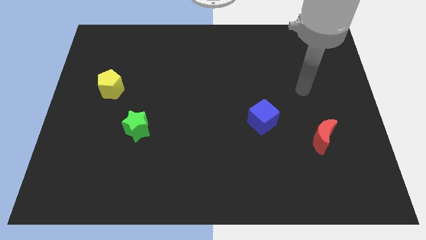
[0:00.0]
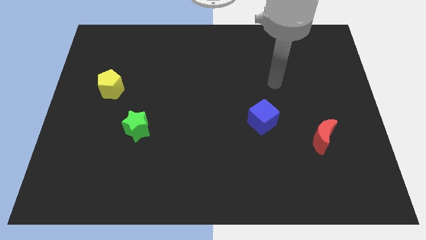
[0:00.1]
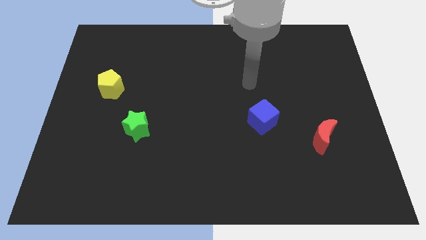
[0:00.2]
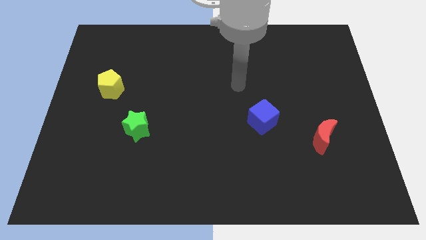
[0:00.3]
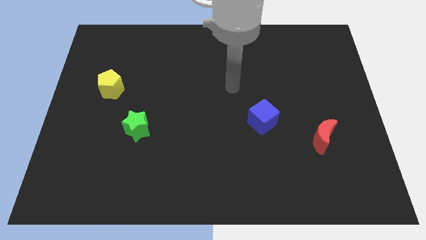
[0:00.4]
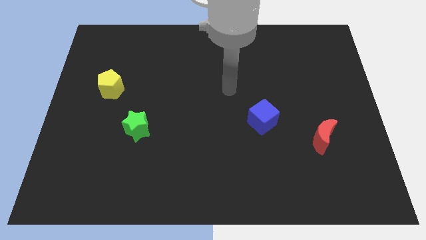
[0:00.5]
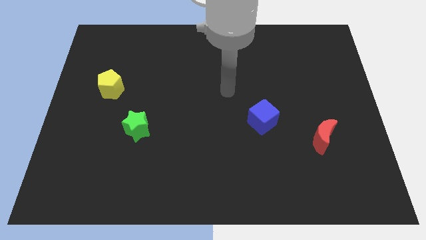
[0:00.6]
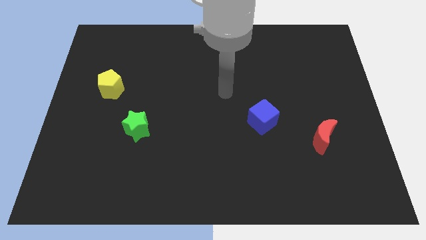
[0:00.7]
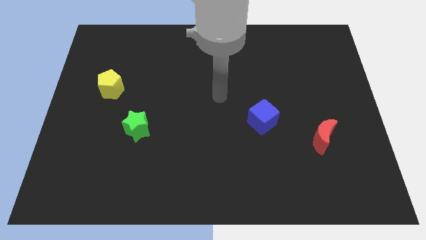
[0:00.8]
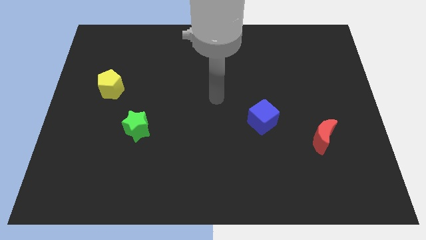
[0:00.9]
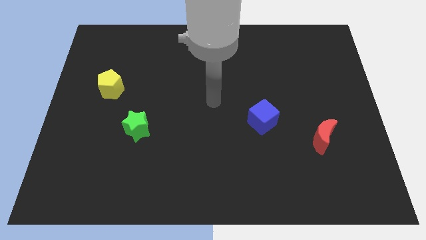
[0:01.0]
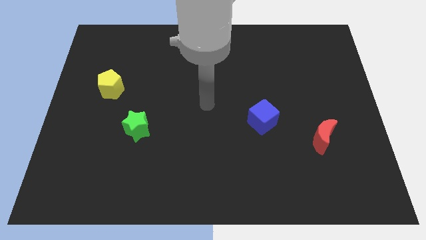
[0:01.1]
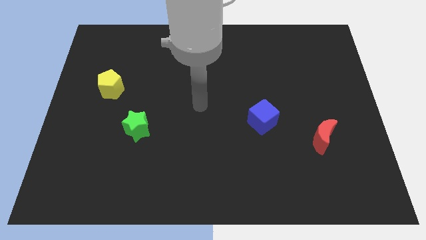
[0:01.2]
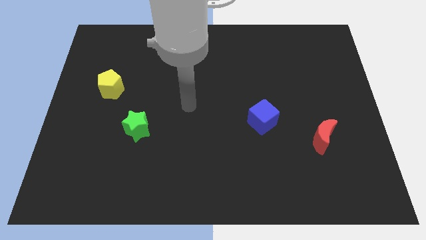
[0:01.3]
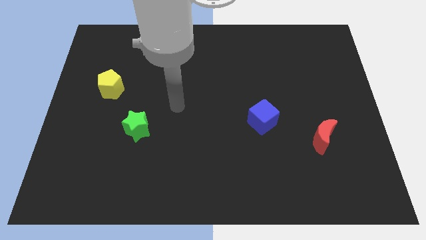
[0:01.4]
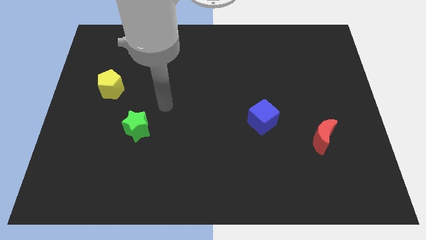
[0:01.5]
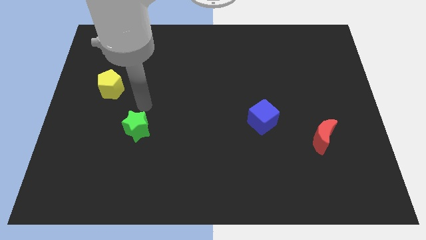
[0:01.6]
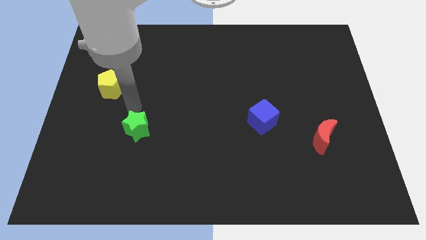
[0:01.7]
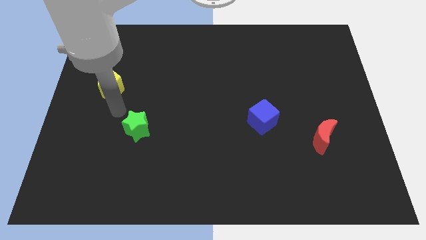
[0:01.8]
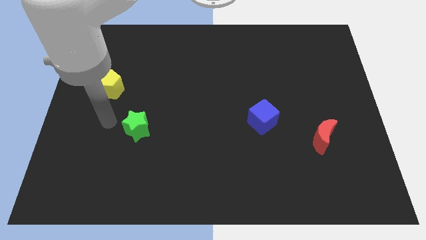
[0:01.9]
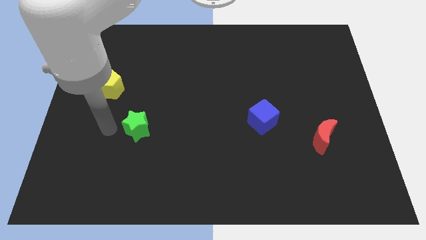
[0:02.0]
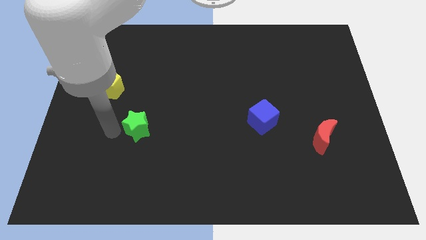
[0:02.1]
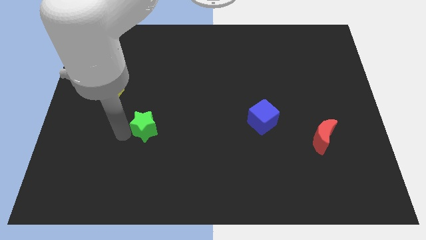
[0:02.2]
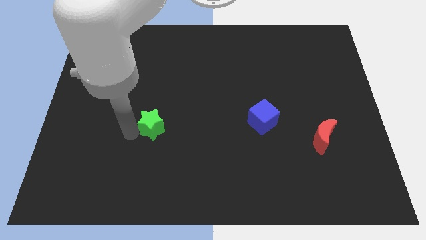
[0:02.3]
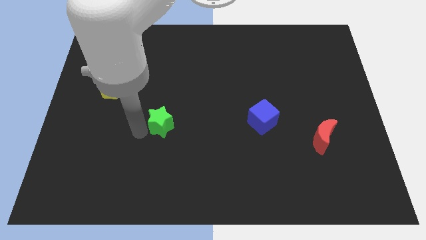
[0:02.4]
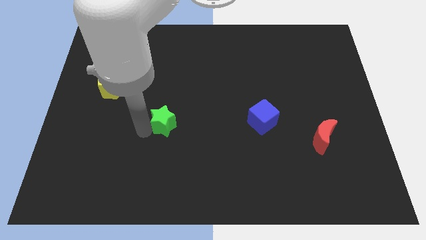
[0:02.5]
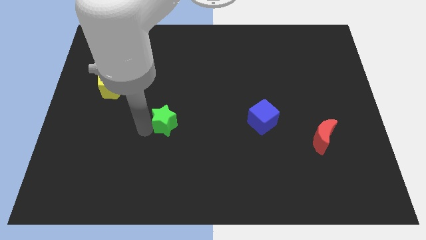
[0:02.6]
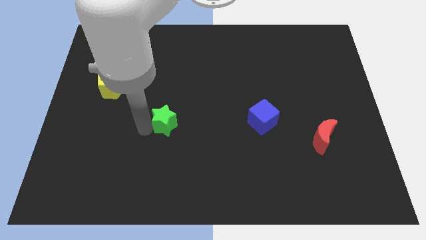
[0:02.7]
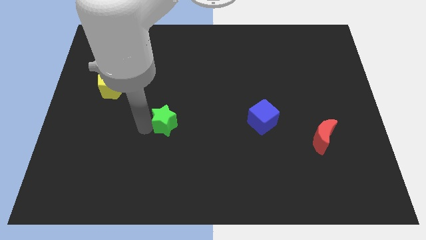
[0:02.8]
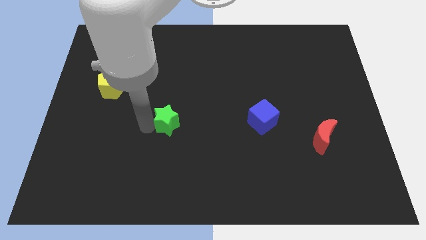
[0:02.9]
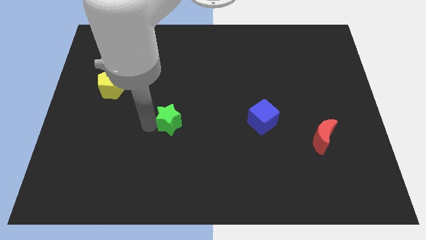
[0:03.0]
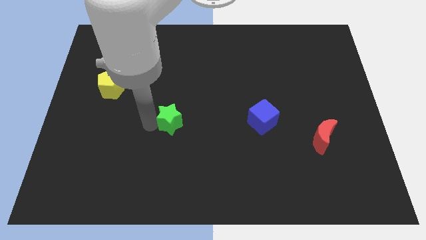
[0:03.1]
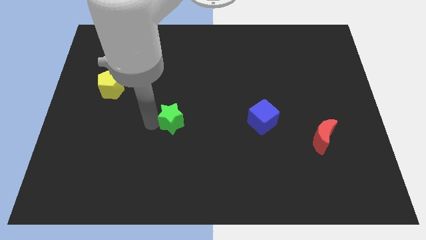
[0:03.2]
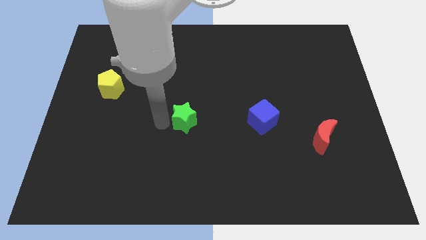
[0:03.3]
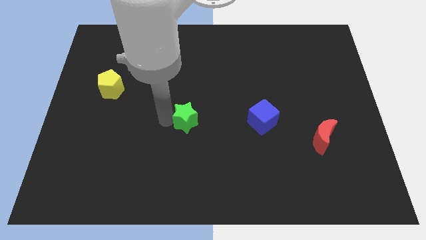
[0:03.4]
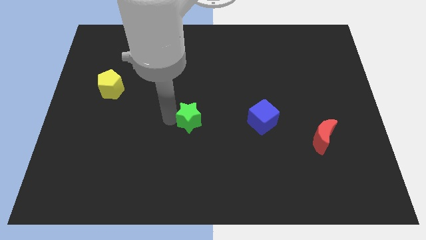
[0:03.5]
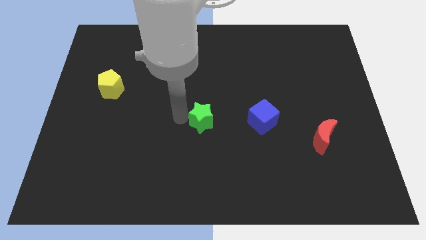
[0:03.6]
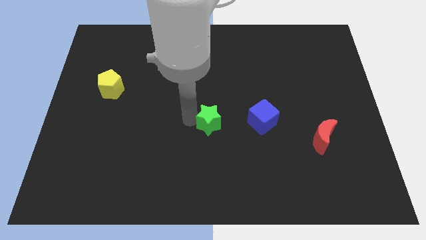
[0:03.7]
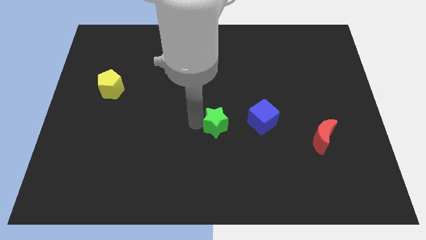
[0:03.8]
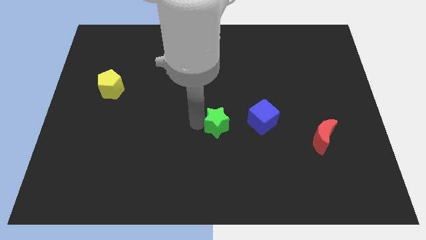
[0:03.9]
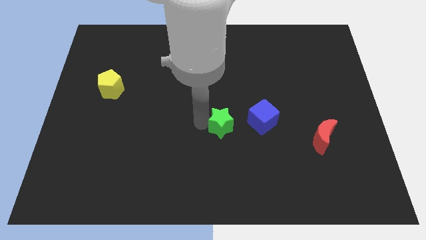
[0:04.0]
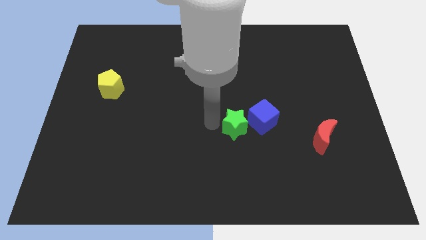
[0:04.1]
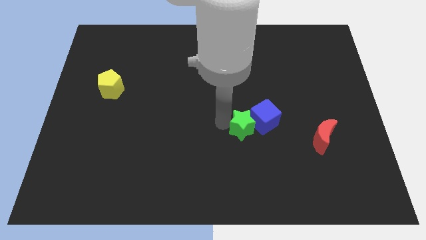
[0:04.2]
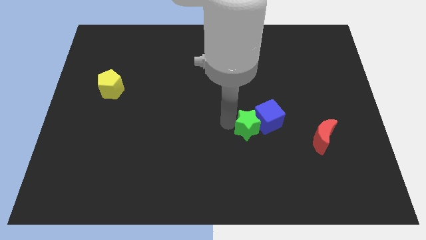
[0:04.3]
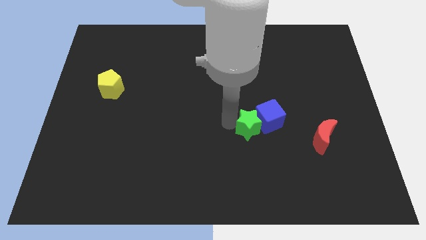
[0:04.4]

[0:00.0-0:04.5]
push the green star close to the cube

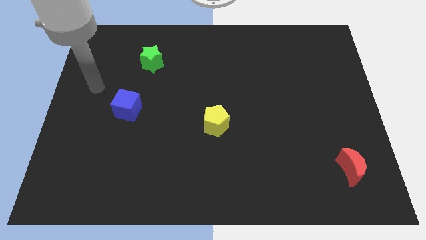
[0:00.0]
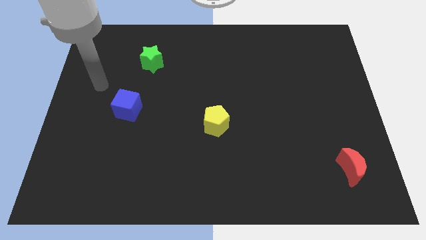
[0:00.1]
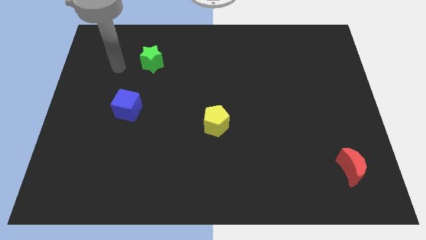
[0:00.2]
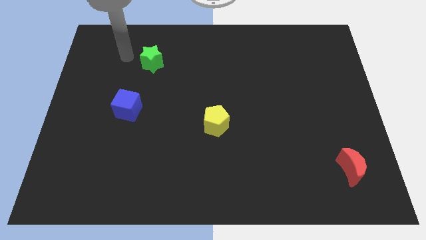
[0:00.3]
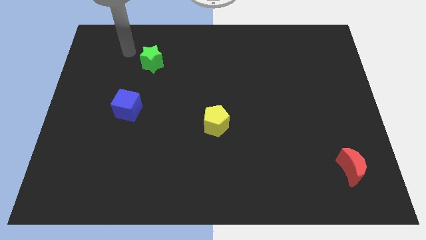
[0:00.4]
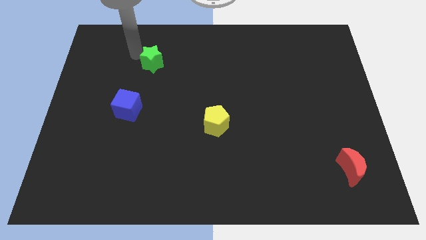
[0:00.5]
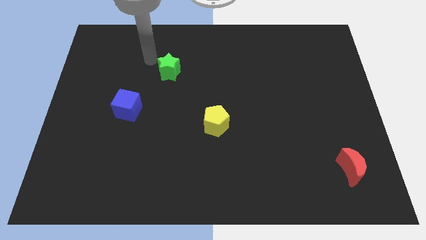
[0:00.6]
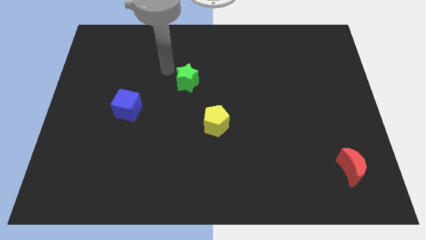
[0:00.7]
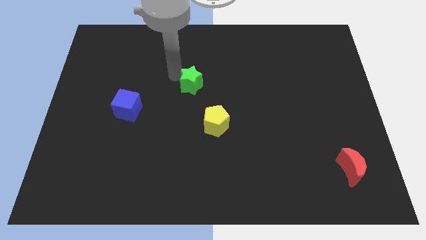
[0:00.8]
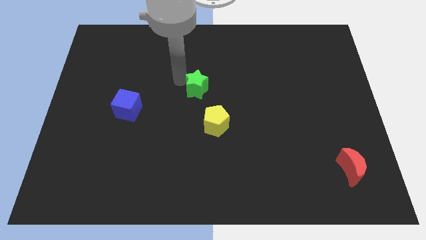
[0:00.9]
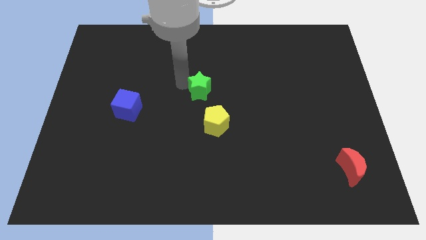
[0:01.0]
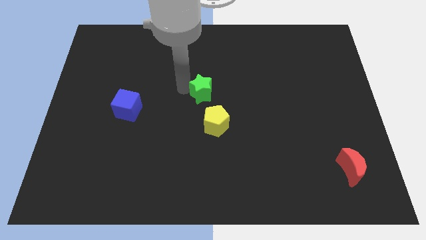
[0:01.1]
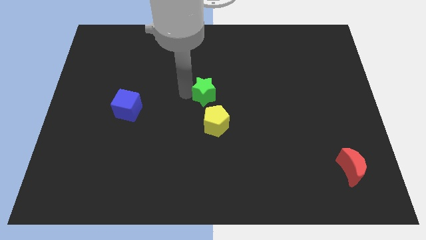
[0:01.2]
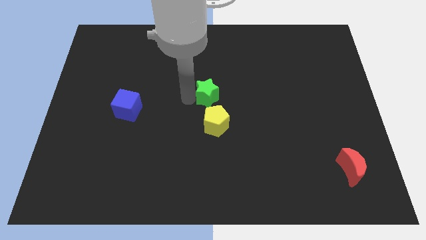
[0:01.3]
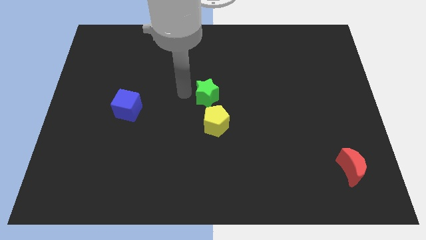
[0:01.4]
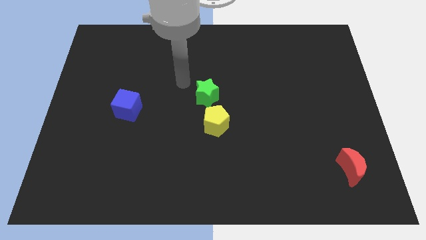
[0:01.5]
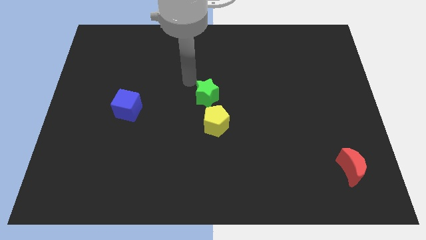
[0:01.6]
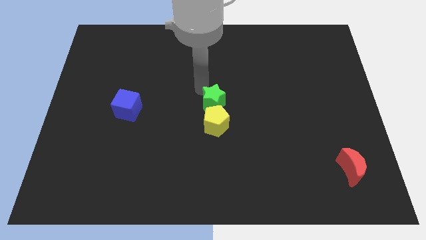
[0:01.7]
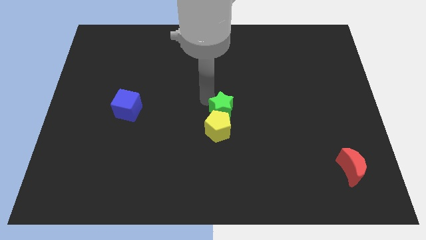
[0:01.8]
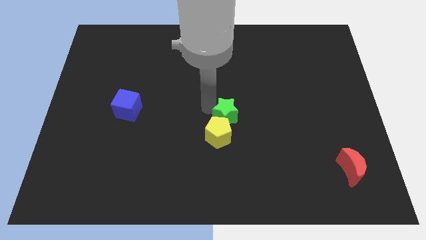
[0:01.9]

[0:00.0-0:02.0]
slide the green block next to the yellow block

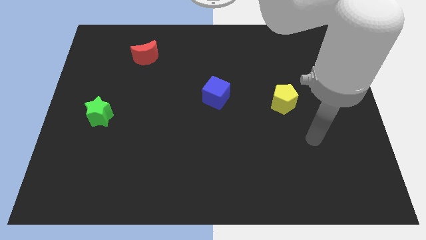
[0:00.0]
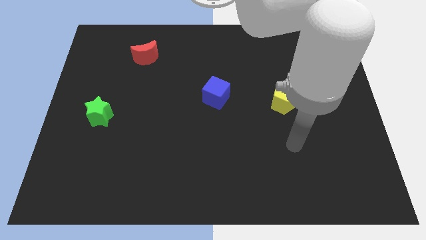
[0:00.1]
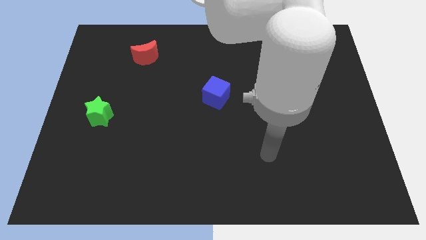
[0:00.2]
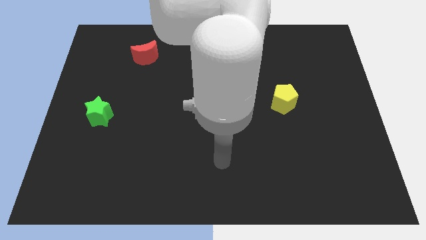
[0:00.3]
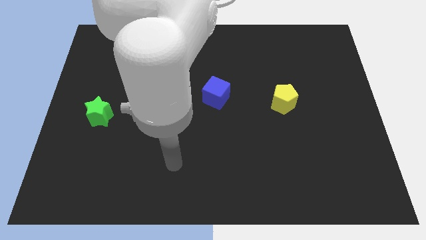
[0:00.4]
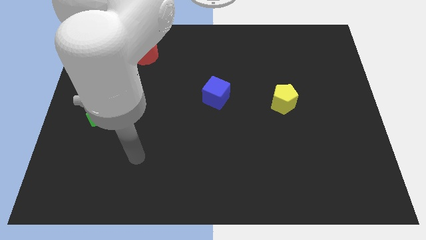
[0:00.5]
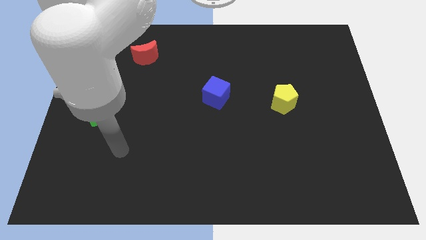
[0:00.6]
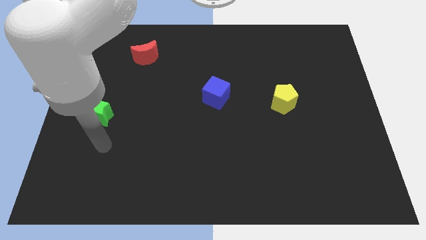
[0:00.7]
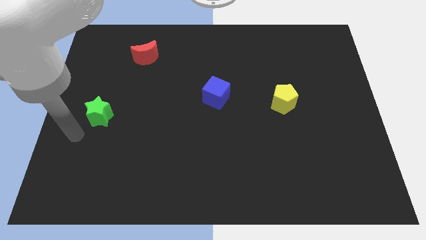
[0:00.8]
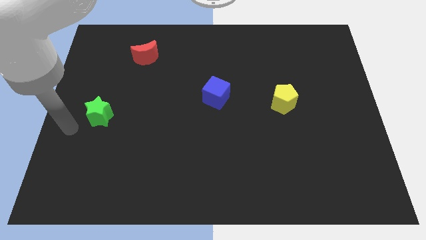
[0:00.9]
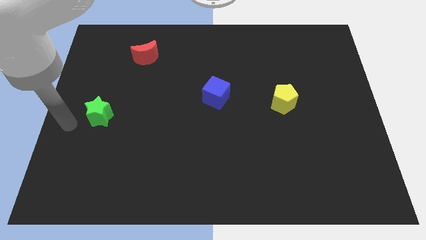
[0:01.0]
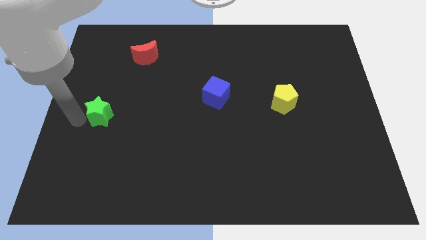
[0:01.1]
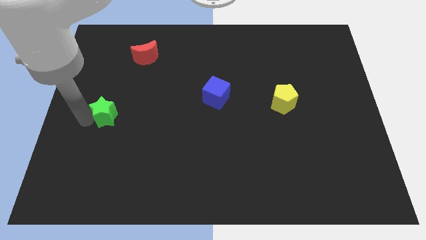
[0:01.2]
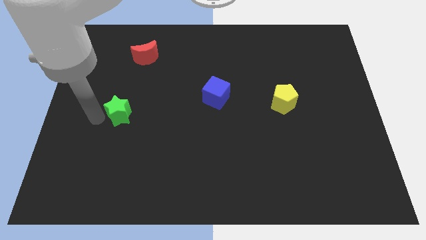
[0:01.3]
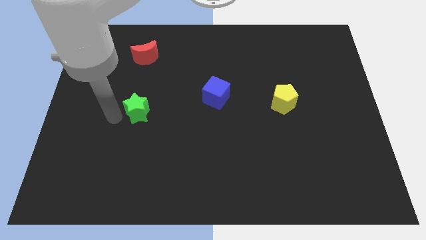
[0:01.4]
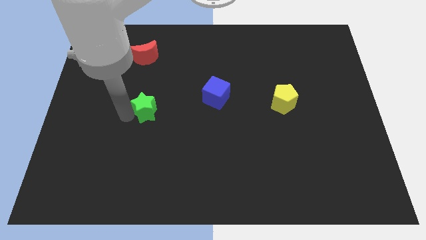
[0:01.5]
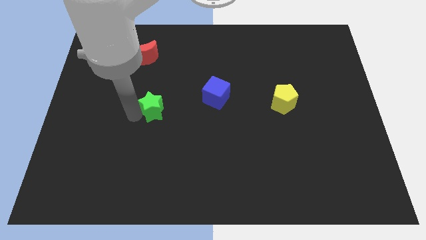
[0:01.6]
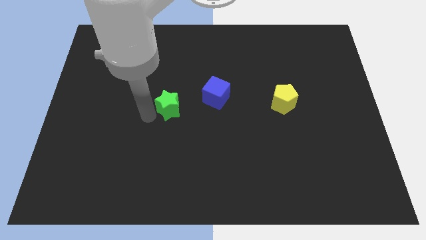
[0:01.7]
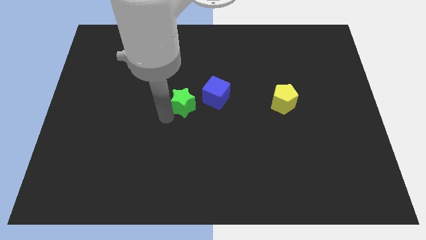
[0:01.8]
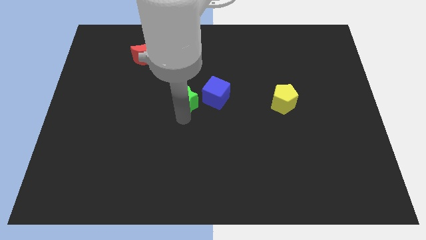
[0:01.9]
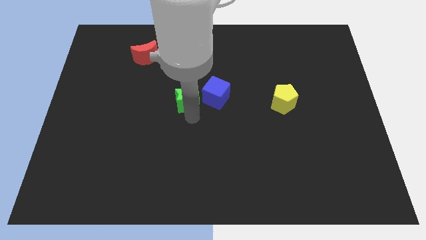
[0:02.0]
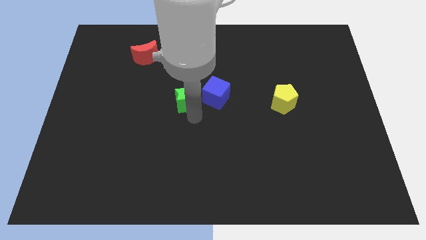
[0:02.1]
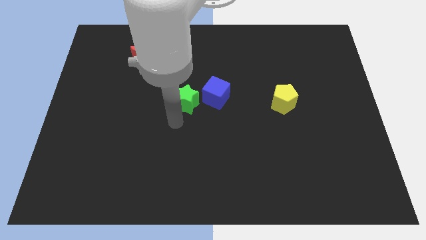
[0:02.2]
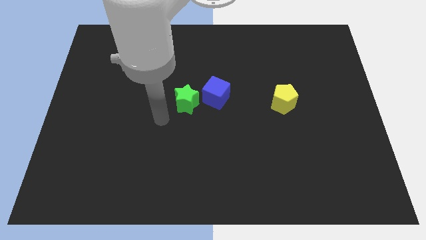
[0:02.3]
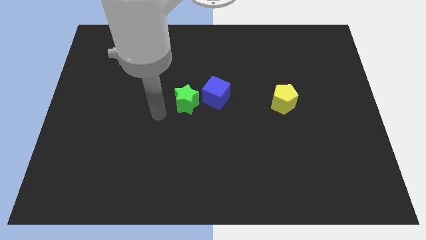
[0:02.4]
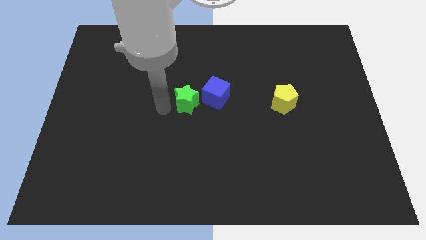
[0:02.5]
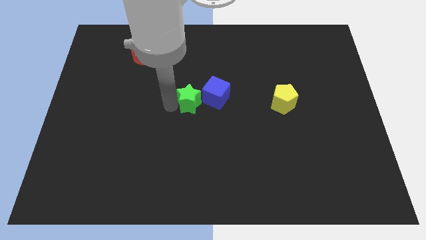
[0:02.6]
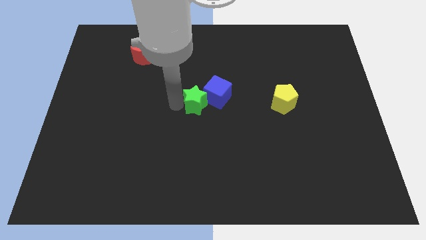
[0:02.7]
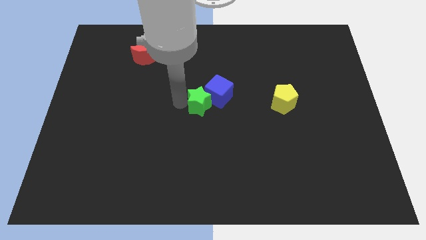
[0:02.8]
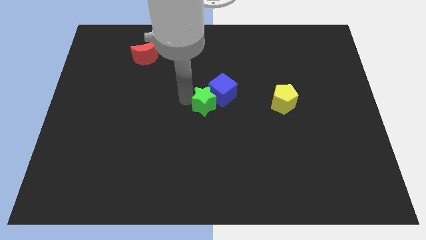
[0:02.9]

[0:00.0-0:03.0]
push the green block to the blue block
